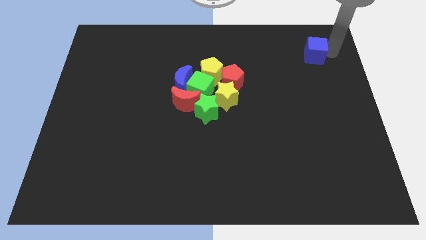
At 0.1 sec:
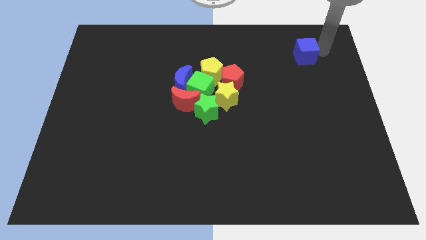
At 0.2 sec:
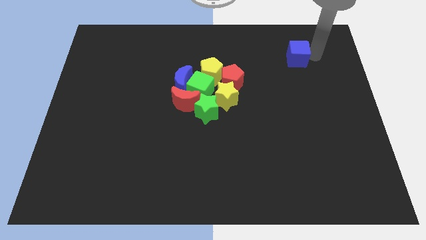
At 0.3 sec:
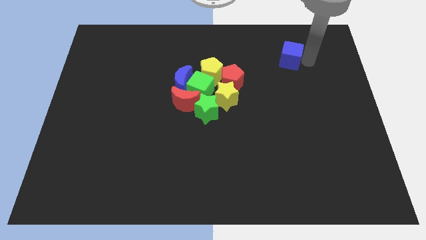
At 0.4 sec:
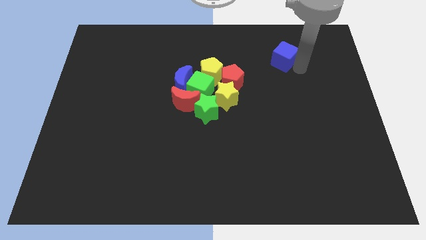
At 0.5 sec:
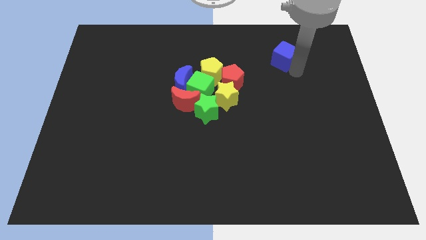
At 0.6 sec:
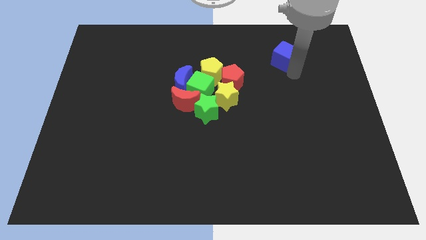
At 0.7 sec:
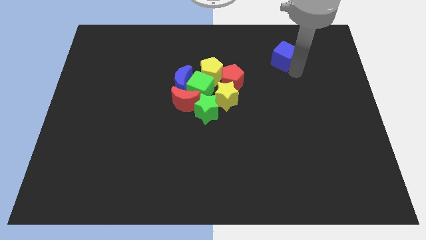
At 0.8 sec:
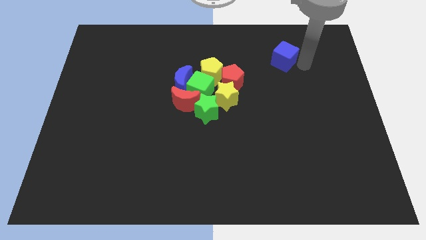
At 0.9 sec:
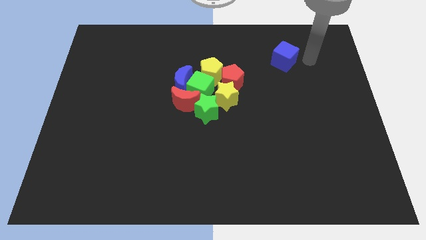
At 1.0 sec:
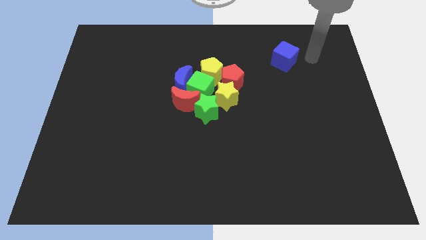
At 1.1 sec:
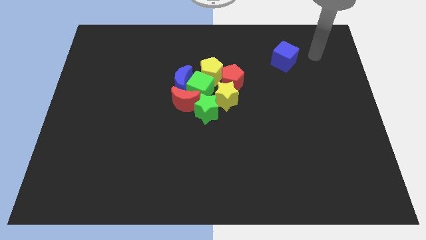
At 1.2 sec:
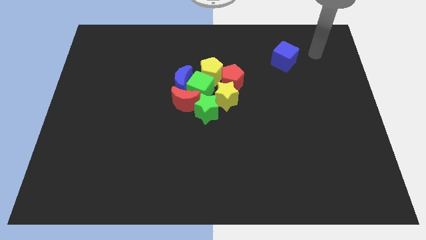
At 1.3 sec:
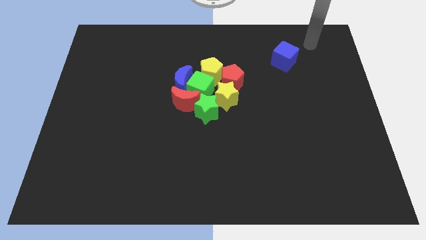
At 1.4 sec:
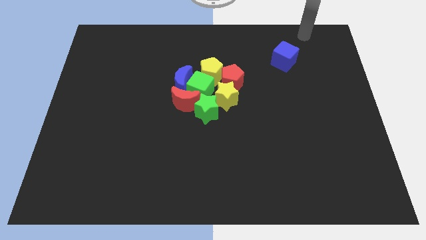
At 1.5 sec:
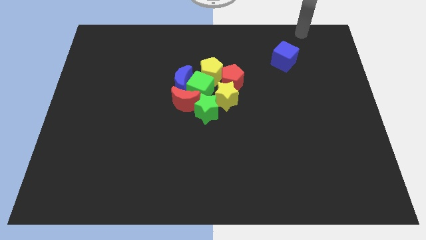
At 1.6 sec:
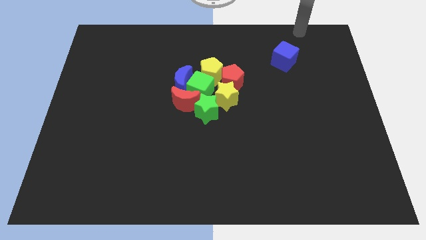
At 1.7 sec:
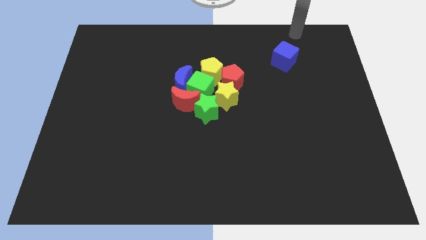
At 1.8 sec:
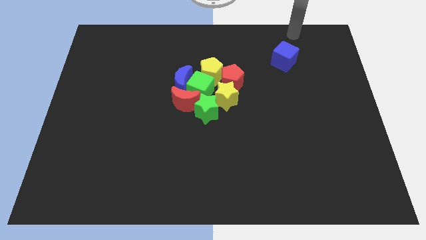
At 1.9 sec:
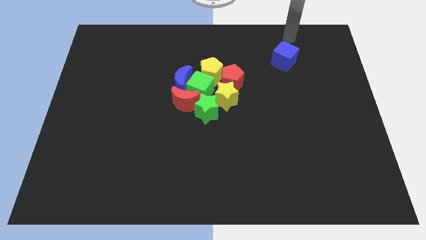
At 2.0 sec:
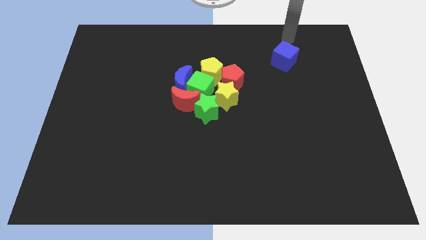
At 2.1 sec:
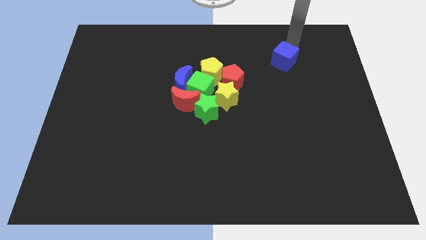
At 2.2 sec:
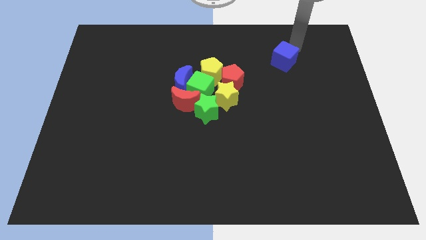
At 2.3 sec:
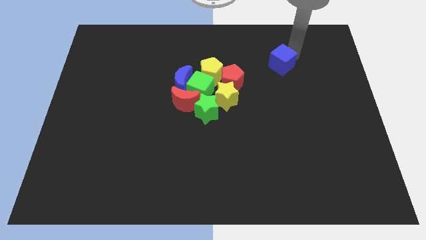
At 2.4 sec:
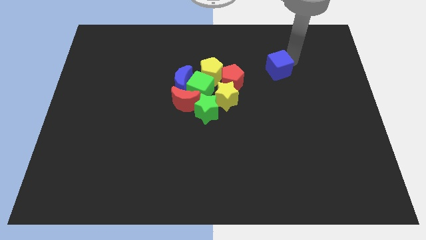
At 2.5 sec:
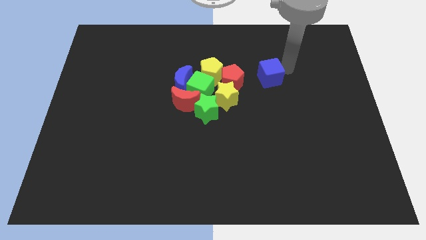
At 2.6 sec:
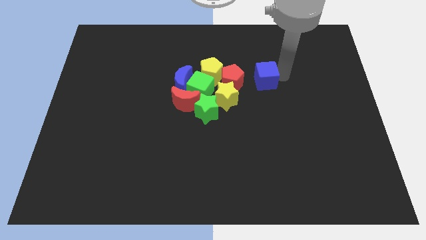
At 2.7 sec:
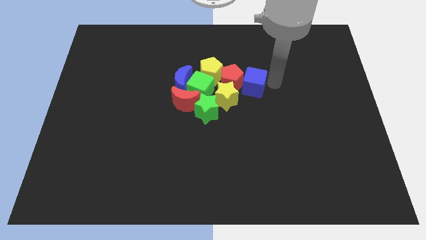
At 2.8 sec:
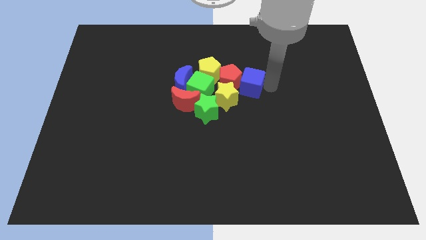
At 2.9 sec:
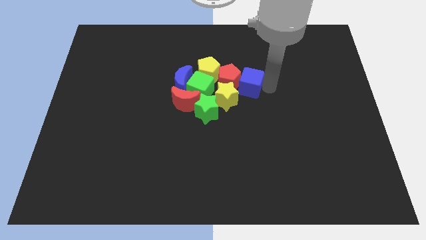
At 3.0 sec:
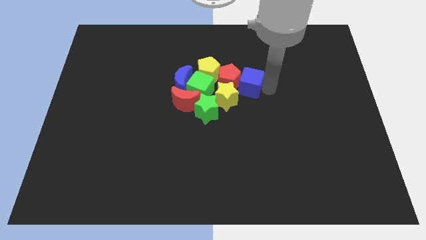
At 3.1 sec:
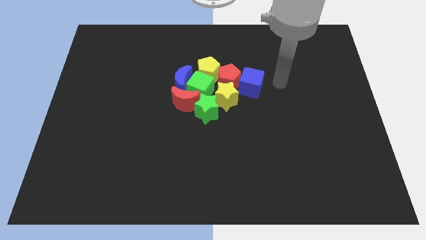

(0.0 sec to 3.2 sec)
push the blue cube into the red pentagon

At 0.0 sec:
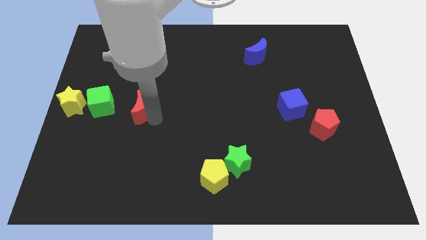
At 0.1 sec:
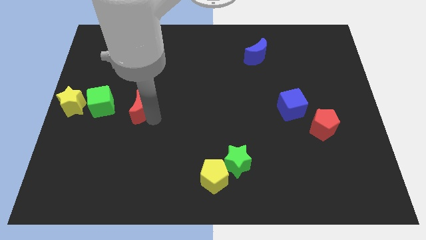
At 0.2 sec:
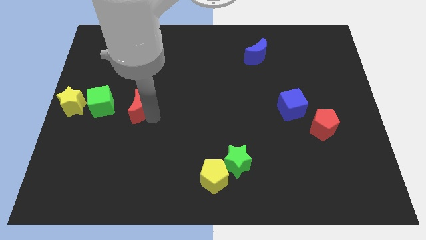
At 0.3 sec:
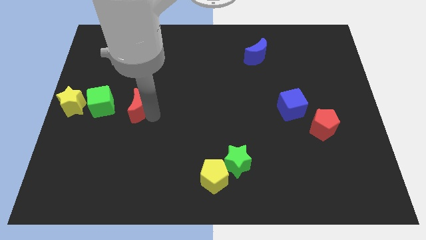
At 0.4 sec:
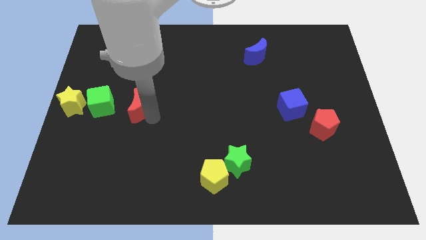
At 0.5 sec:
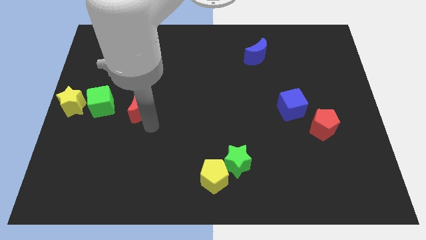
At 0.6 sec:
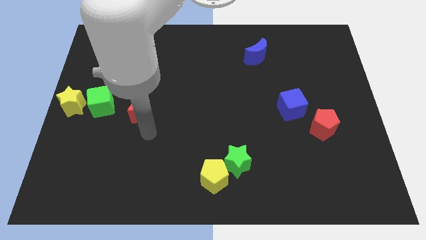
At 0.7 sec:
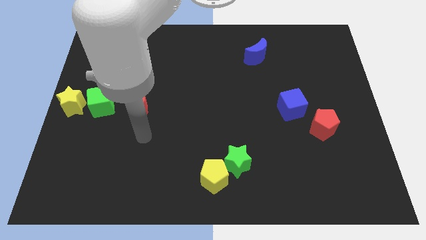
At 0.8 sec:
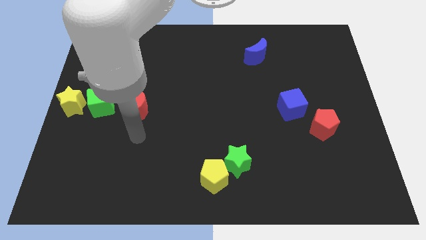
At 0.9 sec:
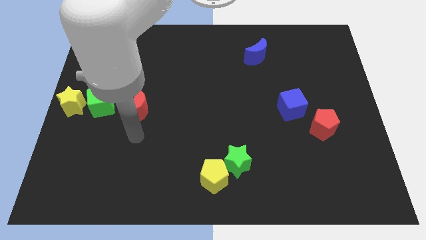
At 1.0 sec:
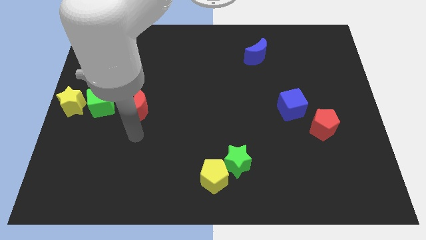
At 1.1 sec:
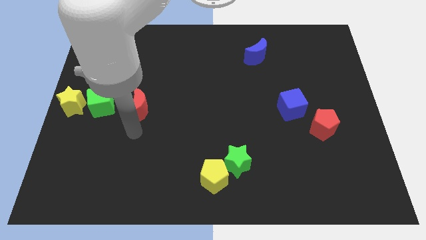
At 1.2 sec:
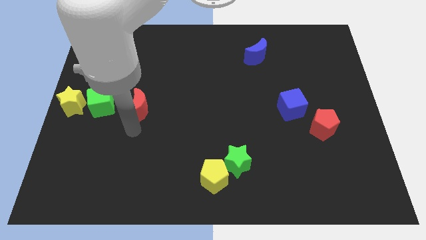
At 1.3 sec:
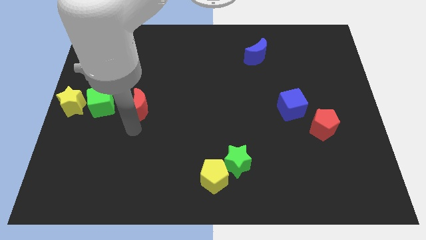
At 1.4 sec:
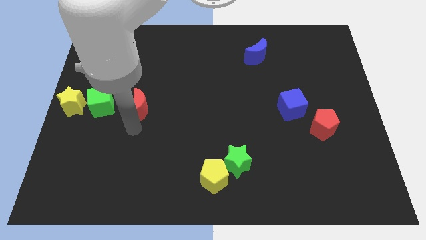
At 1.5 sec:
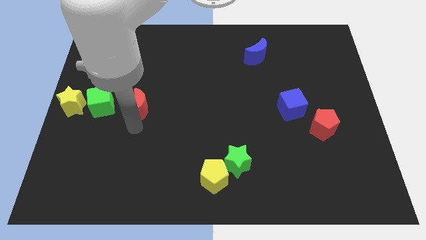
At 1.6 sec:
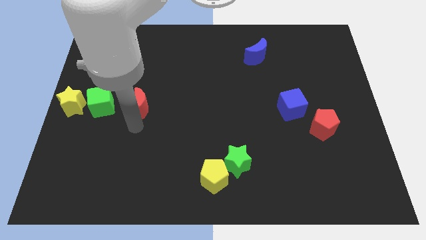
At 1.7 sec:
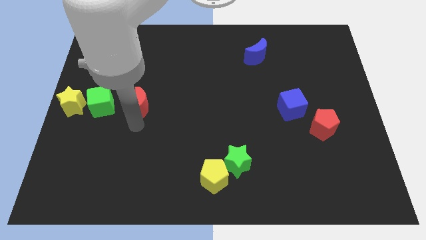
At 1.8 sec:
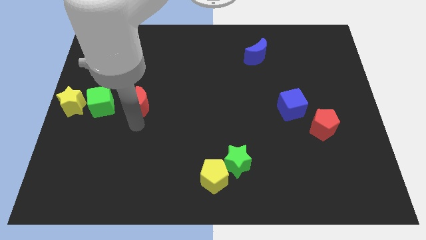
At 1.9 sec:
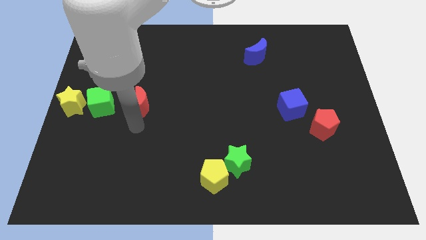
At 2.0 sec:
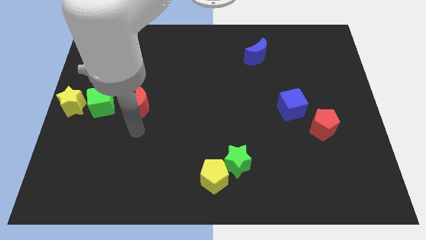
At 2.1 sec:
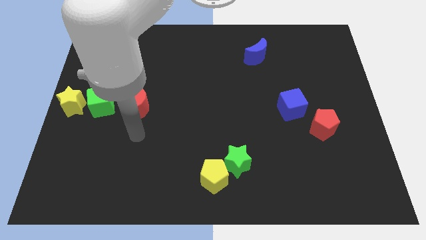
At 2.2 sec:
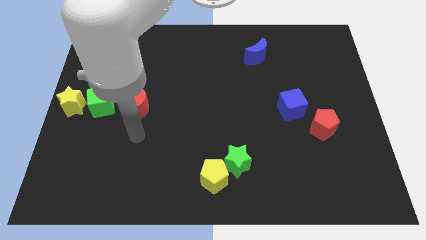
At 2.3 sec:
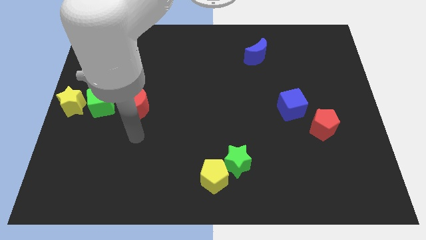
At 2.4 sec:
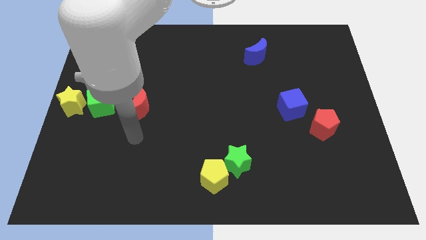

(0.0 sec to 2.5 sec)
move the red crescent close to the green cube

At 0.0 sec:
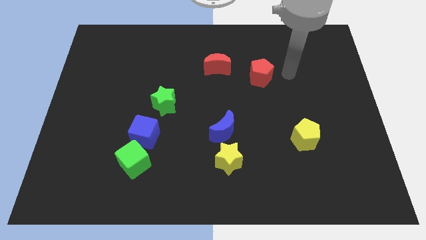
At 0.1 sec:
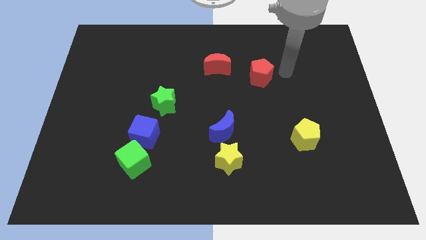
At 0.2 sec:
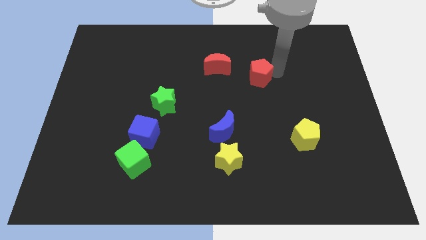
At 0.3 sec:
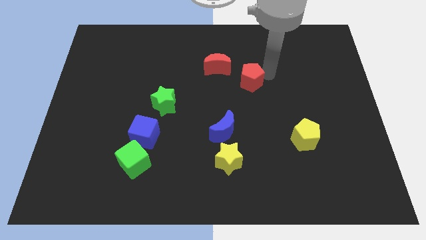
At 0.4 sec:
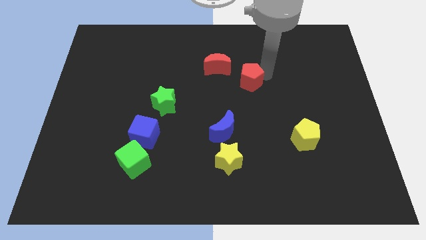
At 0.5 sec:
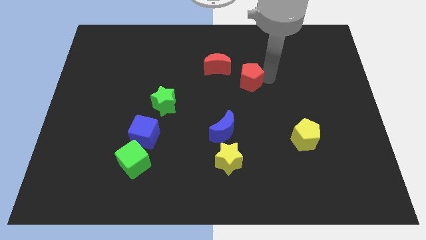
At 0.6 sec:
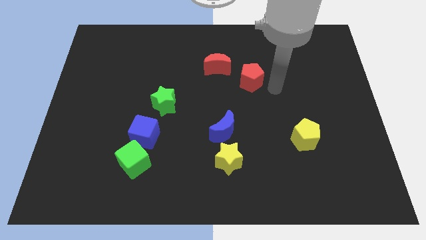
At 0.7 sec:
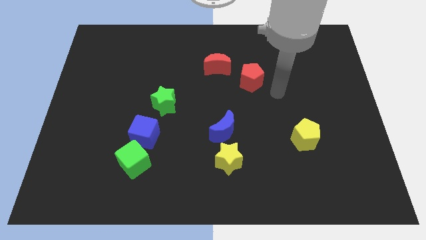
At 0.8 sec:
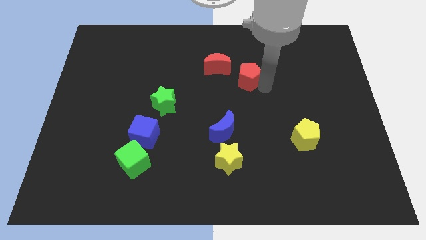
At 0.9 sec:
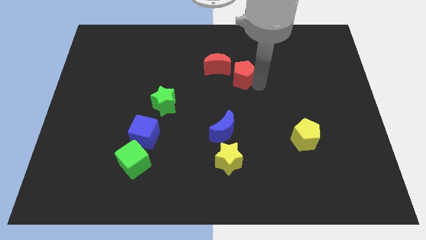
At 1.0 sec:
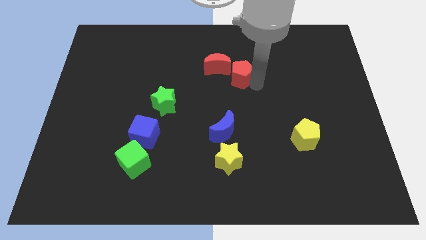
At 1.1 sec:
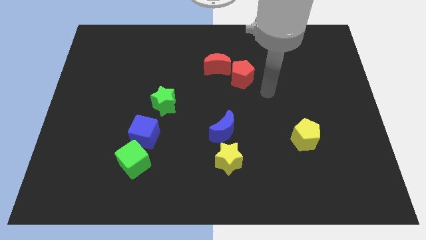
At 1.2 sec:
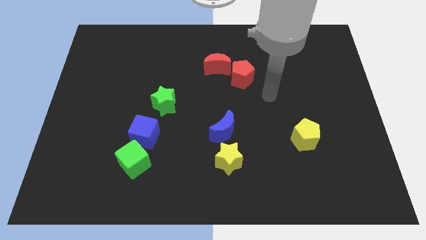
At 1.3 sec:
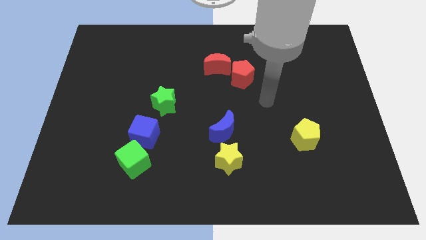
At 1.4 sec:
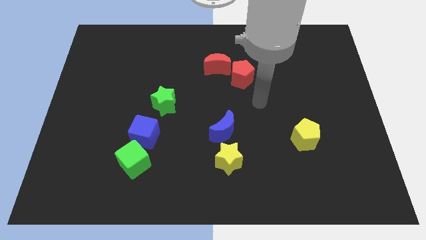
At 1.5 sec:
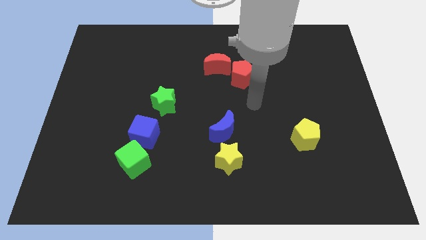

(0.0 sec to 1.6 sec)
place red pentagon to the bottom right of red moon

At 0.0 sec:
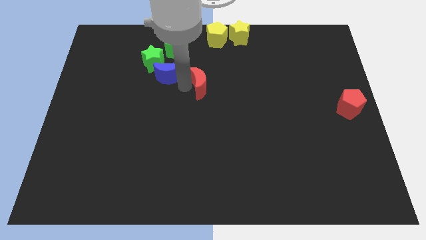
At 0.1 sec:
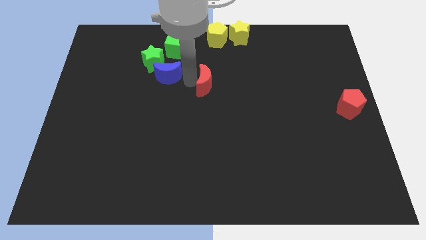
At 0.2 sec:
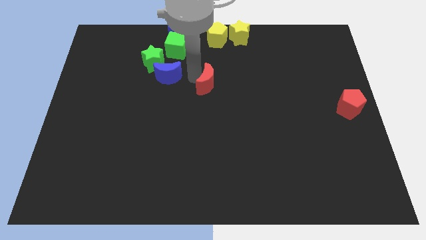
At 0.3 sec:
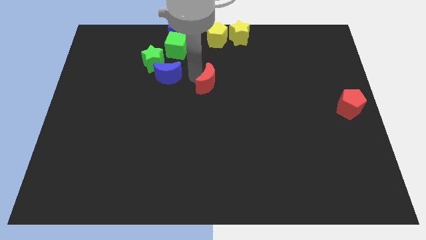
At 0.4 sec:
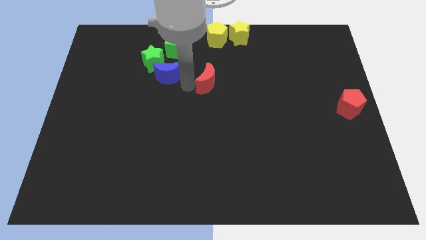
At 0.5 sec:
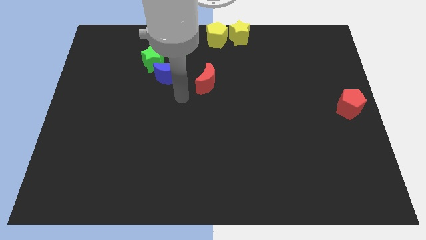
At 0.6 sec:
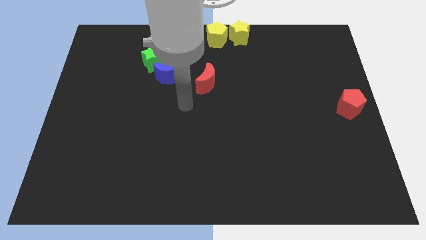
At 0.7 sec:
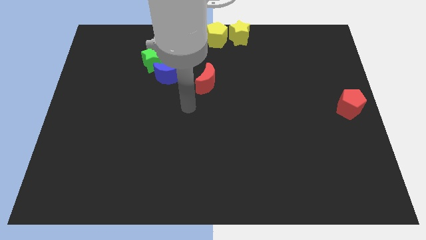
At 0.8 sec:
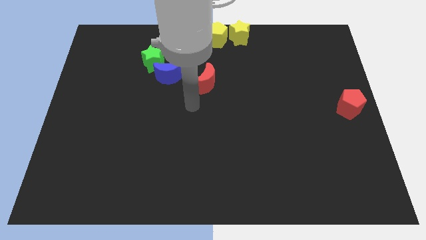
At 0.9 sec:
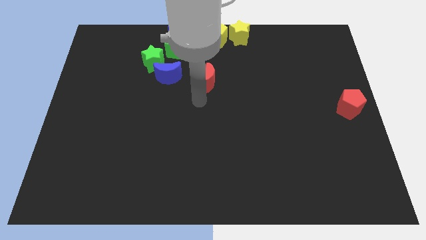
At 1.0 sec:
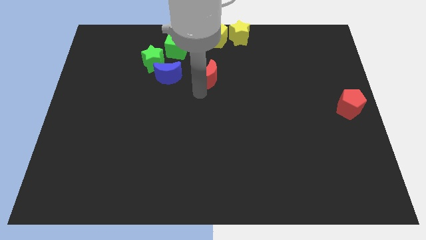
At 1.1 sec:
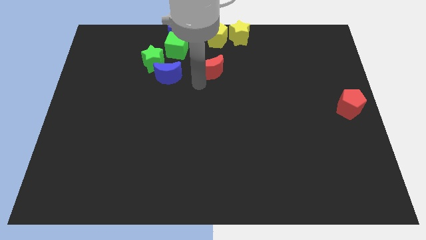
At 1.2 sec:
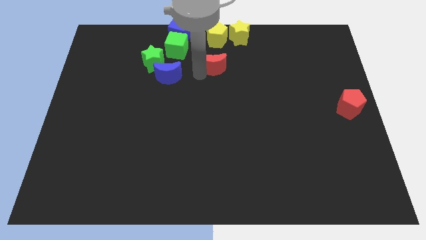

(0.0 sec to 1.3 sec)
put the red moon vertically below the yellow pentagon
